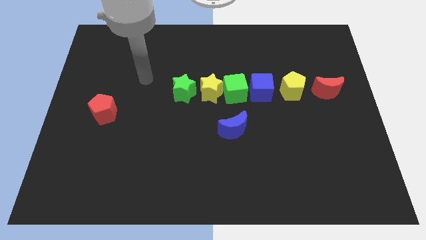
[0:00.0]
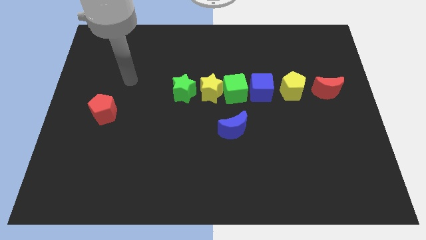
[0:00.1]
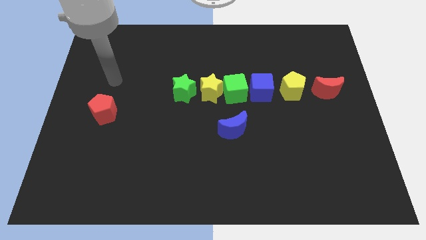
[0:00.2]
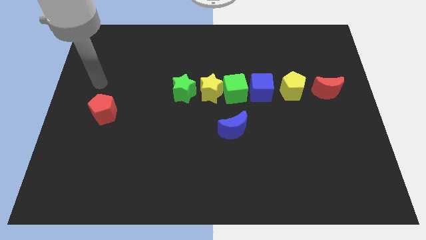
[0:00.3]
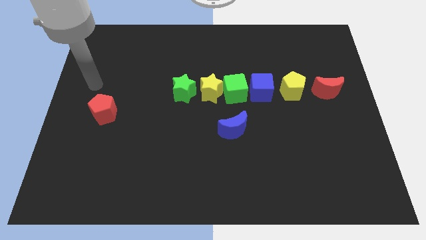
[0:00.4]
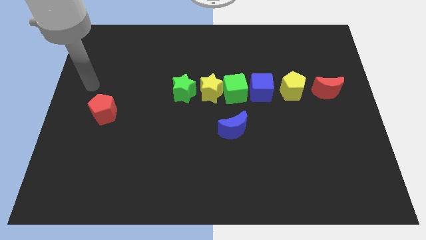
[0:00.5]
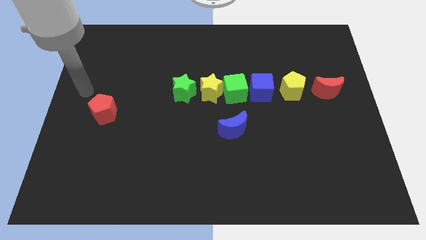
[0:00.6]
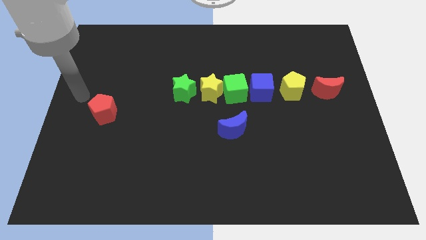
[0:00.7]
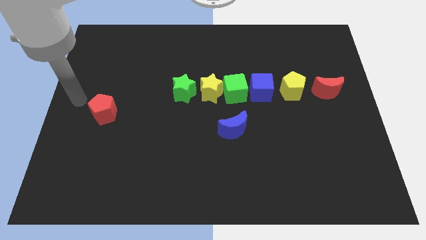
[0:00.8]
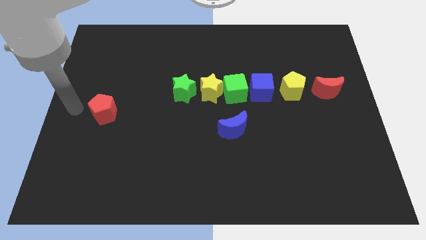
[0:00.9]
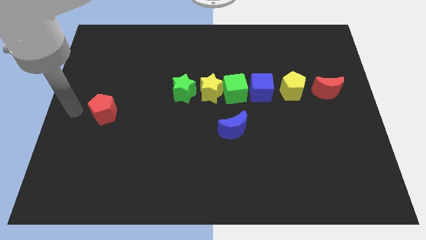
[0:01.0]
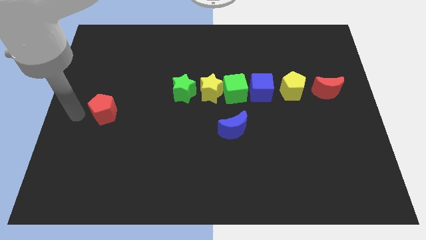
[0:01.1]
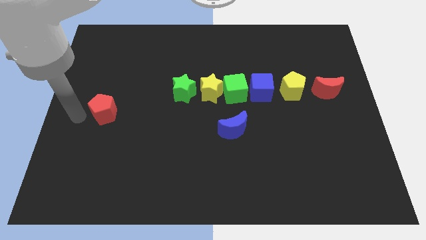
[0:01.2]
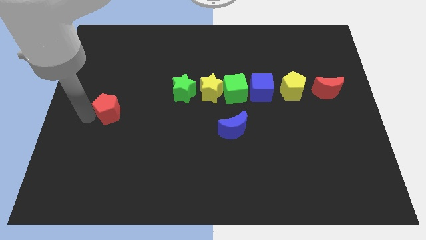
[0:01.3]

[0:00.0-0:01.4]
move arm at the left side of the red pentagon

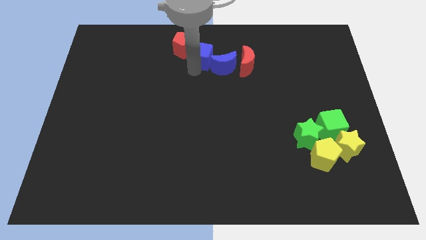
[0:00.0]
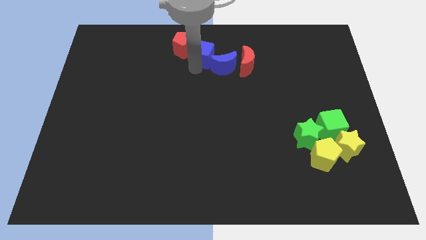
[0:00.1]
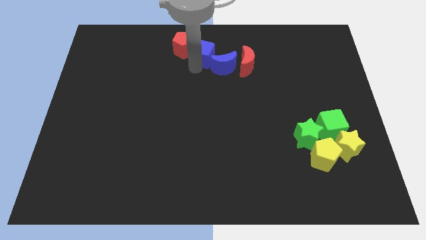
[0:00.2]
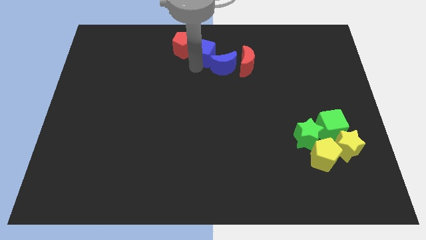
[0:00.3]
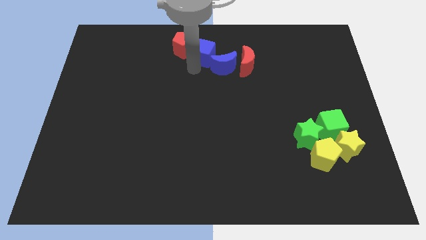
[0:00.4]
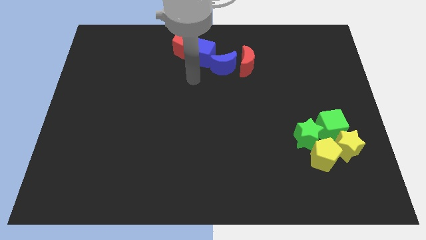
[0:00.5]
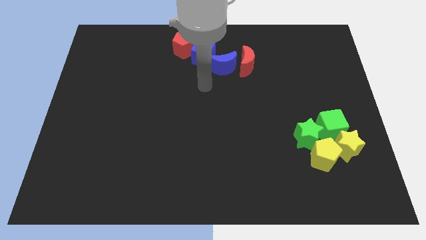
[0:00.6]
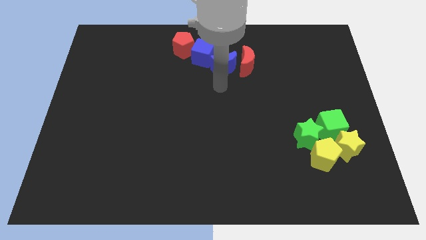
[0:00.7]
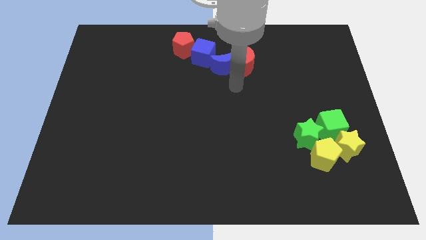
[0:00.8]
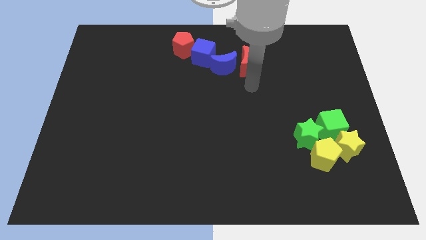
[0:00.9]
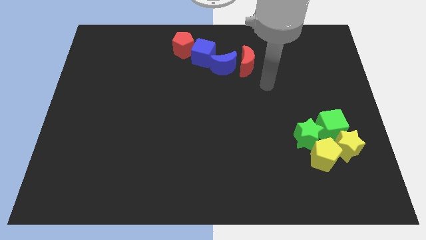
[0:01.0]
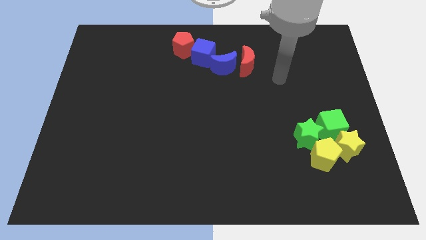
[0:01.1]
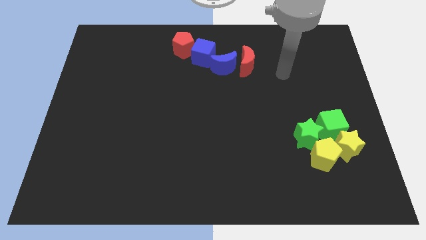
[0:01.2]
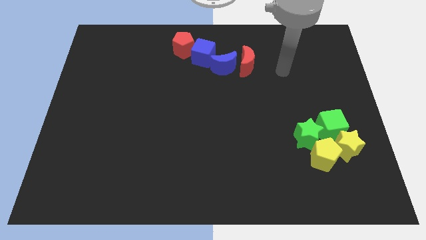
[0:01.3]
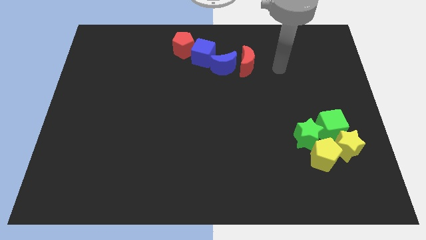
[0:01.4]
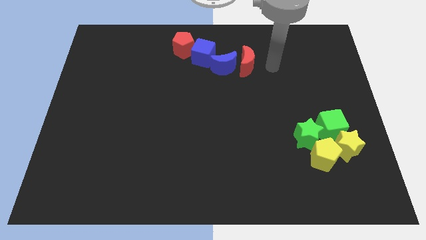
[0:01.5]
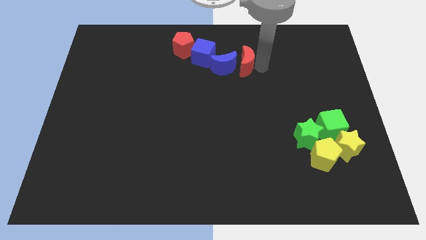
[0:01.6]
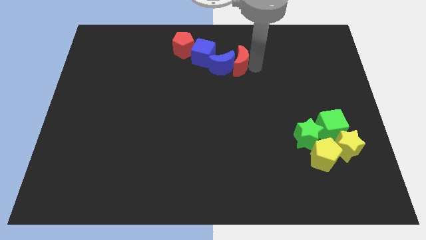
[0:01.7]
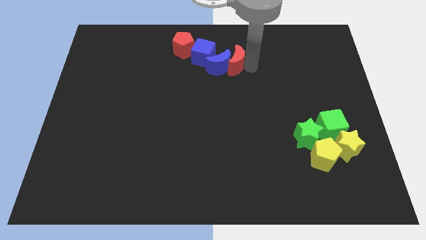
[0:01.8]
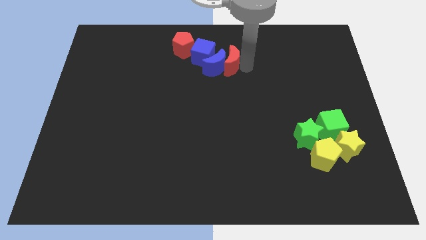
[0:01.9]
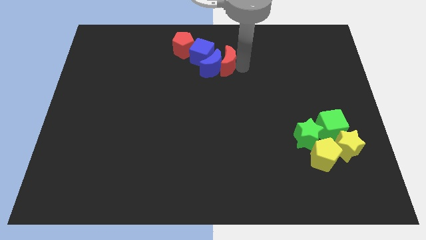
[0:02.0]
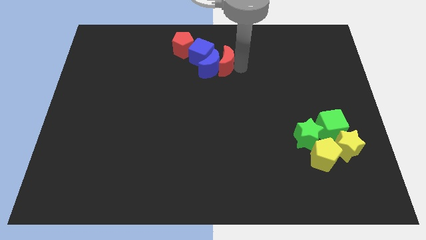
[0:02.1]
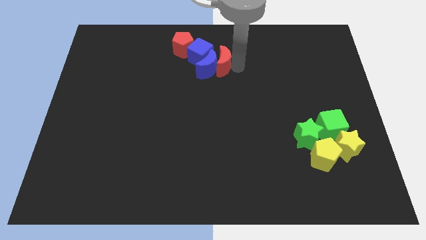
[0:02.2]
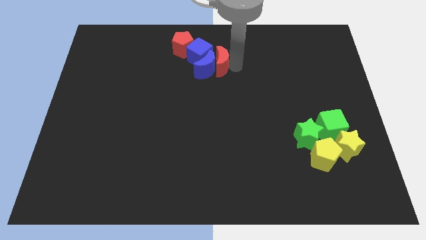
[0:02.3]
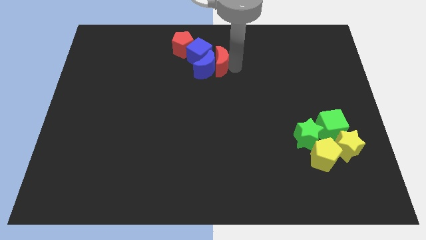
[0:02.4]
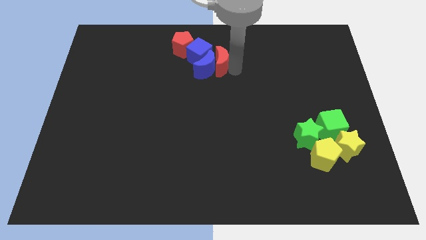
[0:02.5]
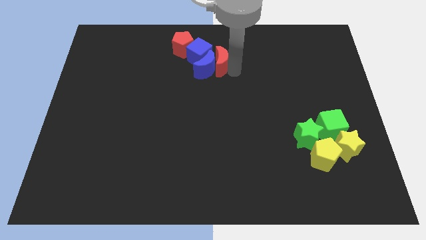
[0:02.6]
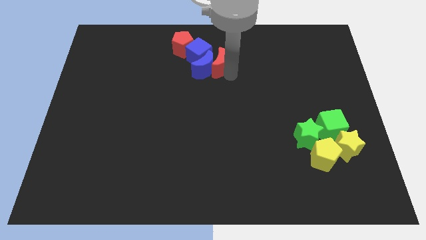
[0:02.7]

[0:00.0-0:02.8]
move the arm away from the blue cube

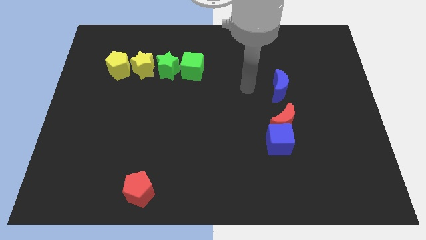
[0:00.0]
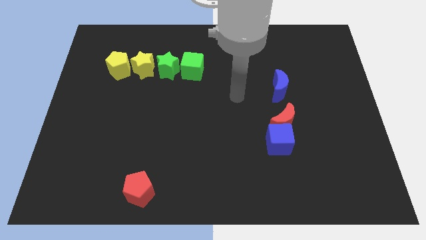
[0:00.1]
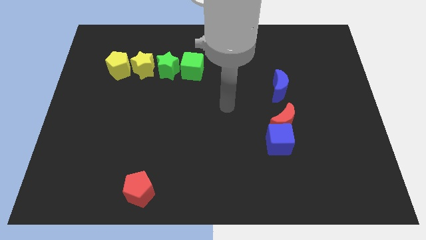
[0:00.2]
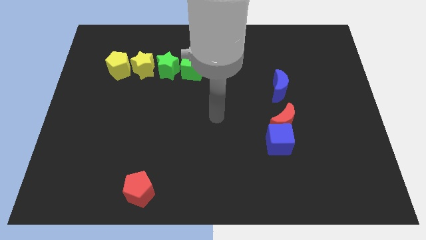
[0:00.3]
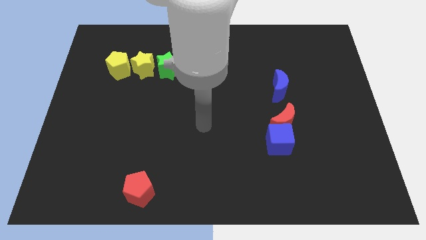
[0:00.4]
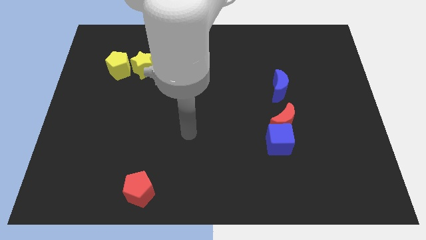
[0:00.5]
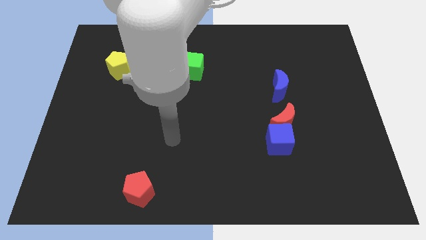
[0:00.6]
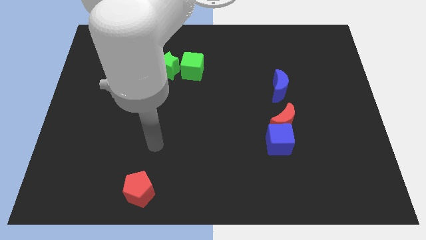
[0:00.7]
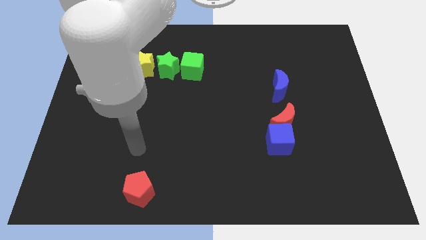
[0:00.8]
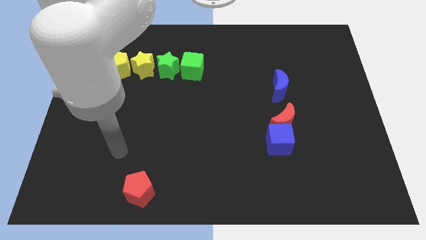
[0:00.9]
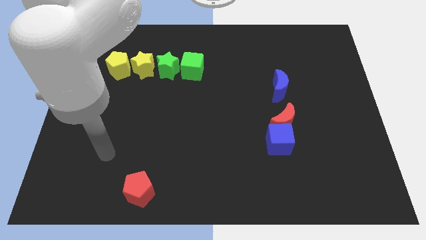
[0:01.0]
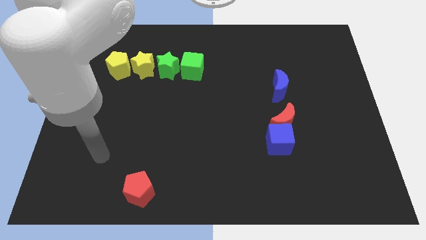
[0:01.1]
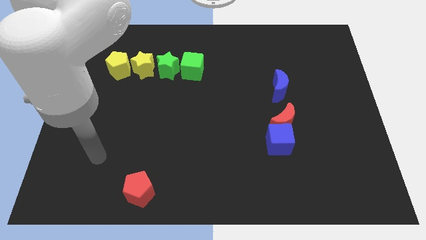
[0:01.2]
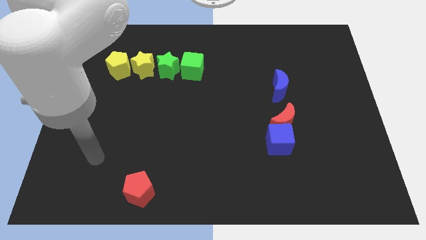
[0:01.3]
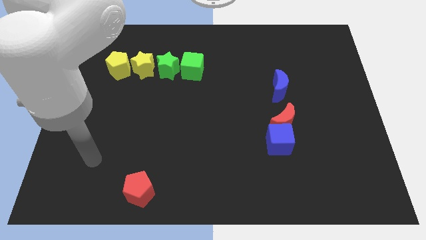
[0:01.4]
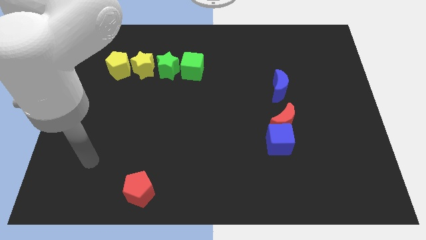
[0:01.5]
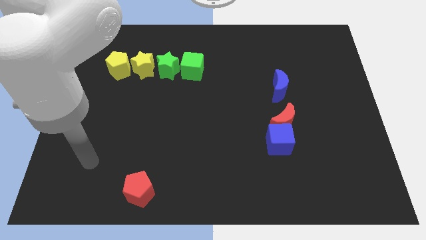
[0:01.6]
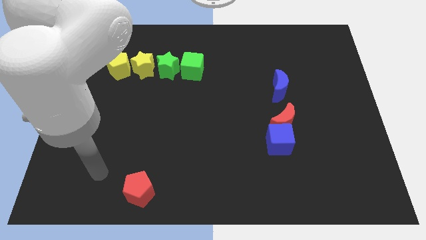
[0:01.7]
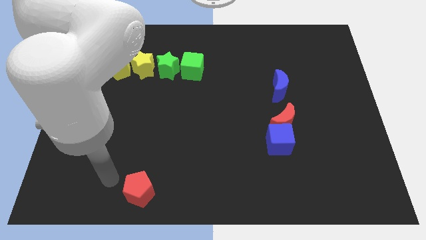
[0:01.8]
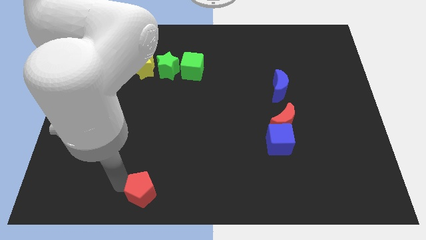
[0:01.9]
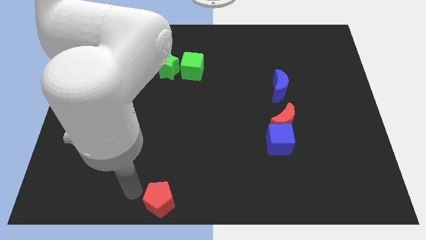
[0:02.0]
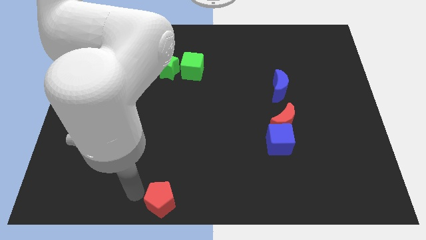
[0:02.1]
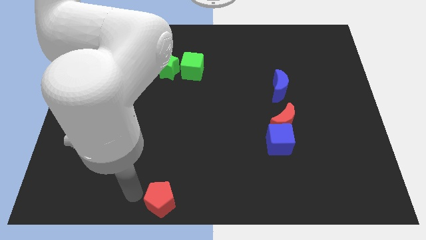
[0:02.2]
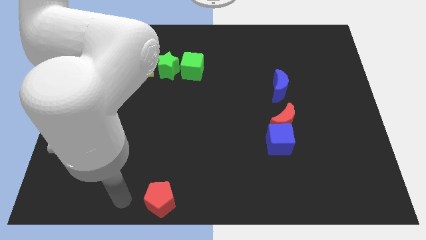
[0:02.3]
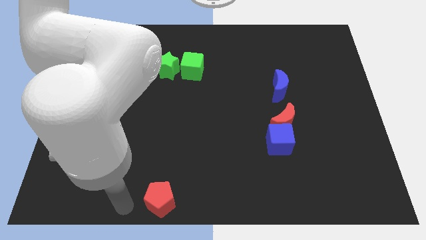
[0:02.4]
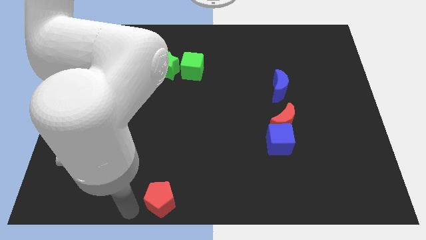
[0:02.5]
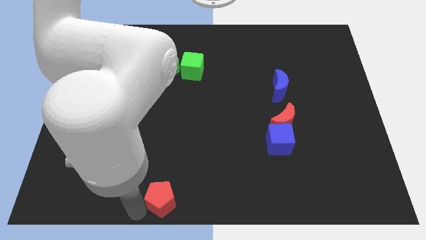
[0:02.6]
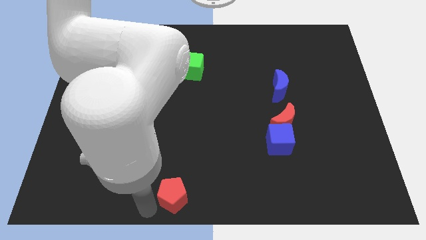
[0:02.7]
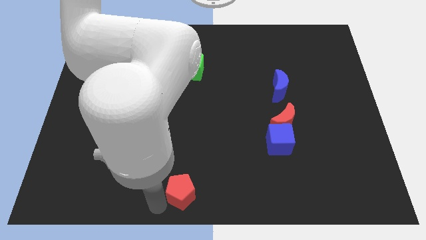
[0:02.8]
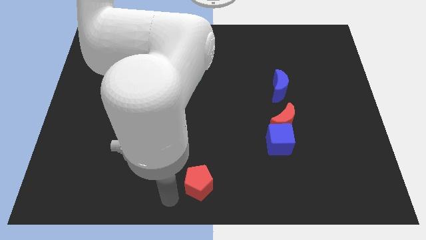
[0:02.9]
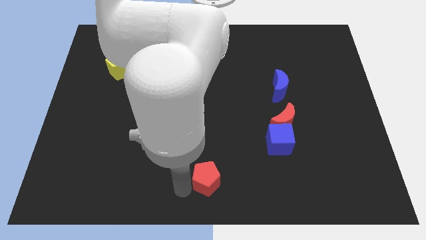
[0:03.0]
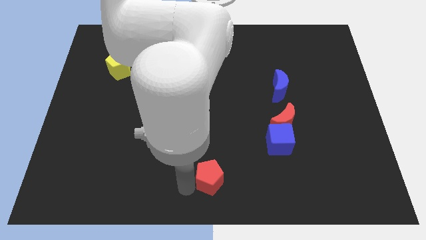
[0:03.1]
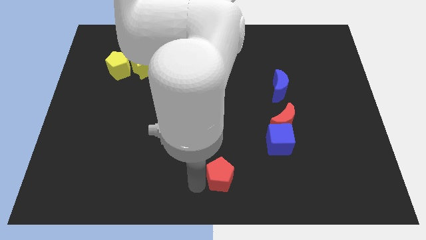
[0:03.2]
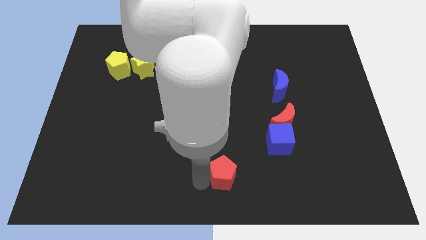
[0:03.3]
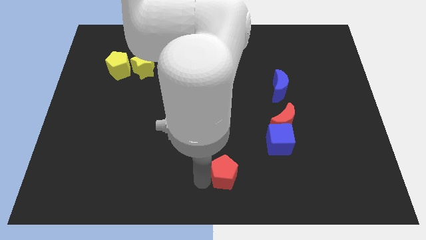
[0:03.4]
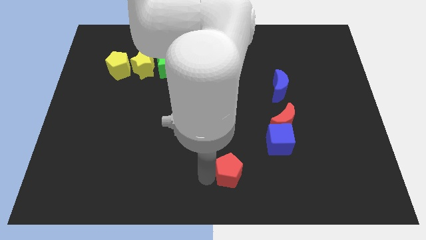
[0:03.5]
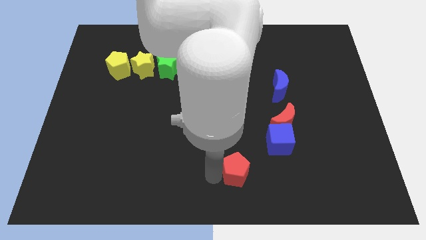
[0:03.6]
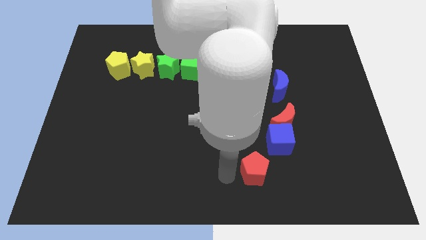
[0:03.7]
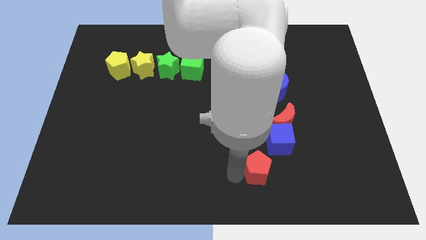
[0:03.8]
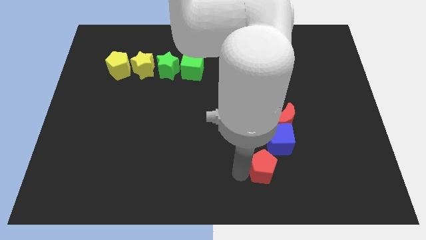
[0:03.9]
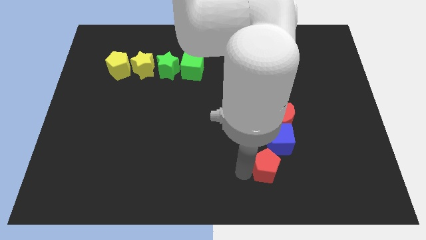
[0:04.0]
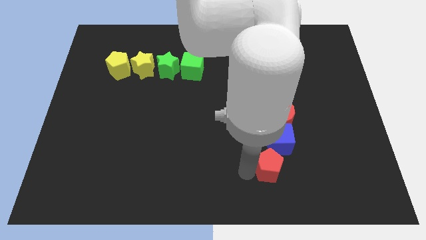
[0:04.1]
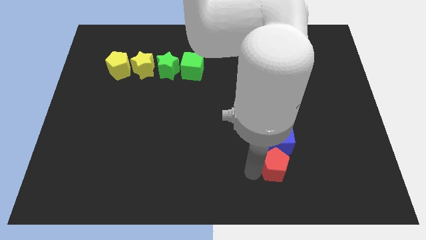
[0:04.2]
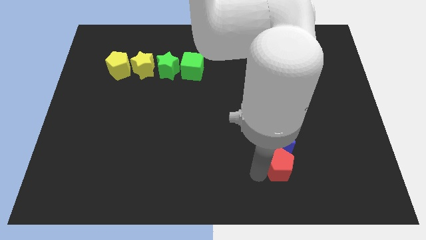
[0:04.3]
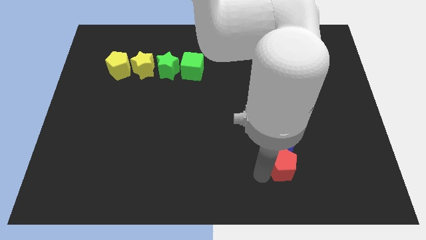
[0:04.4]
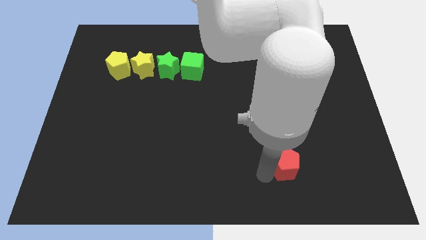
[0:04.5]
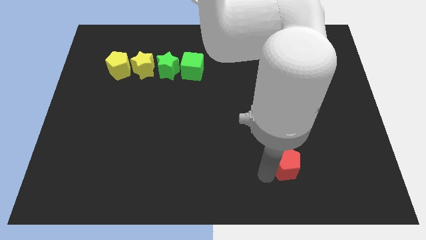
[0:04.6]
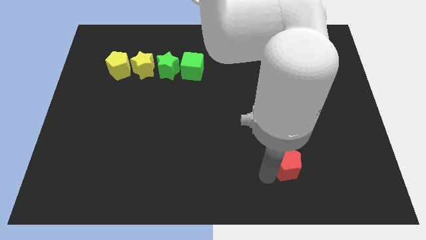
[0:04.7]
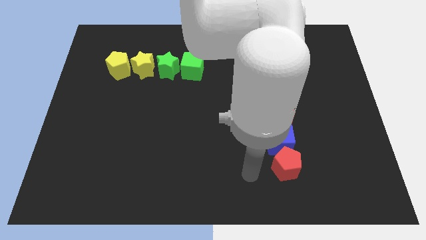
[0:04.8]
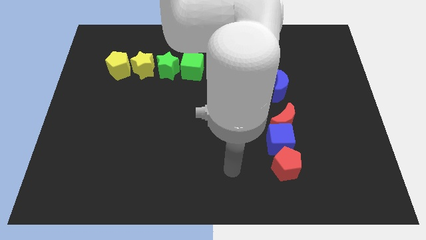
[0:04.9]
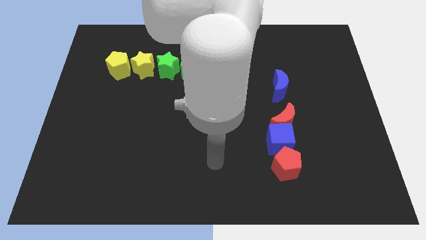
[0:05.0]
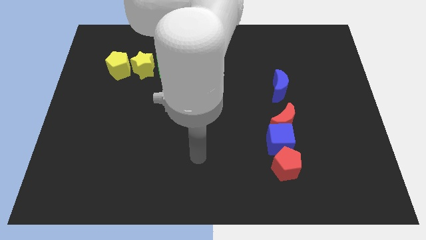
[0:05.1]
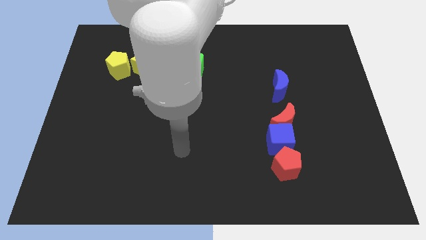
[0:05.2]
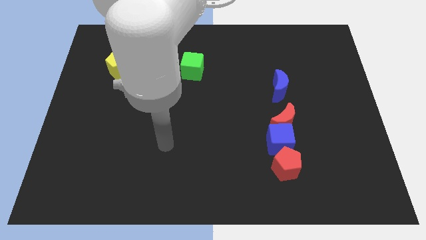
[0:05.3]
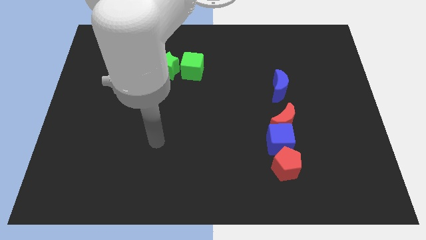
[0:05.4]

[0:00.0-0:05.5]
push the red pentagon below to the blue cube
